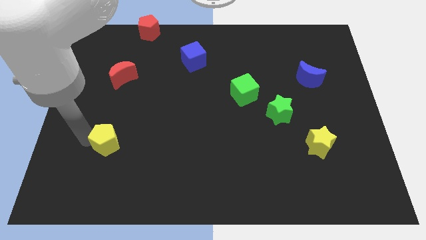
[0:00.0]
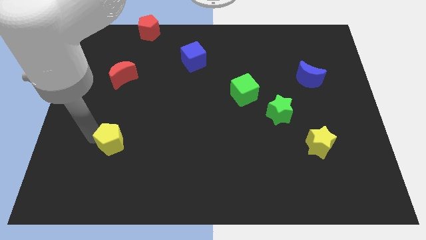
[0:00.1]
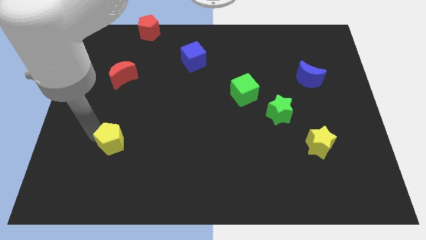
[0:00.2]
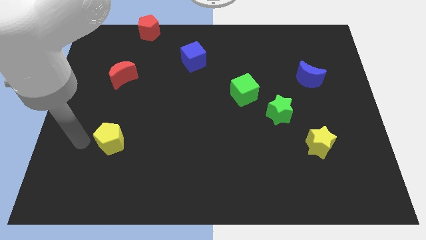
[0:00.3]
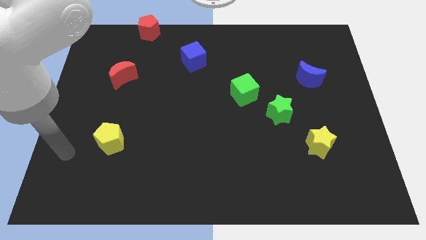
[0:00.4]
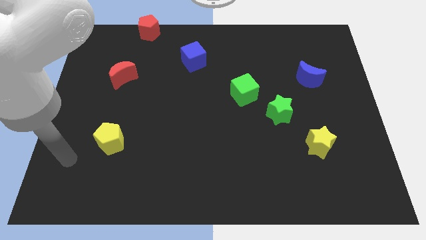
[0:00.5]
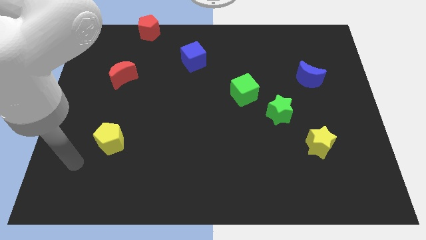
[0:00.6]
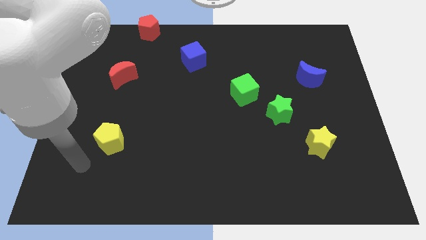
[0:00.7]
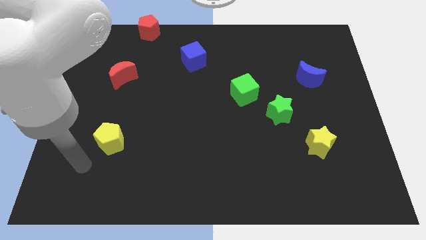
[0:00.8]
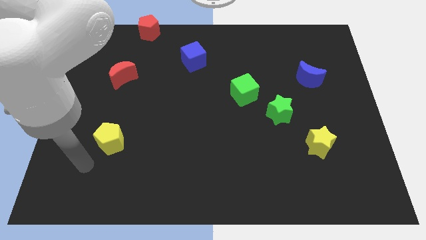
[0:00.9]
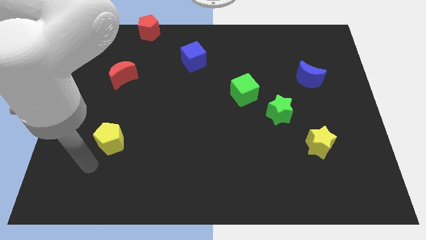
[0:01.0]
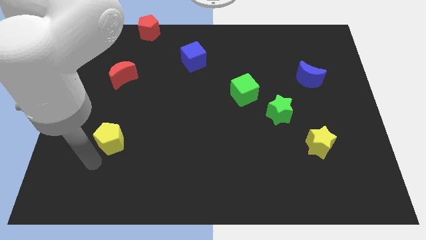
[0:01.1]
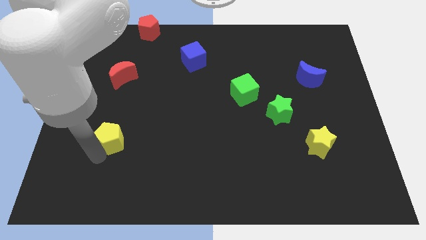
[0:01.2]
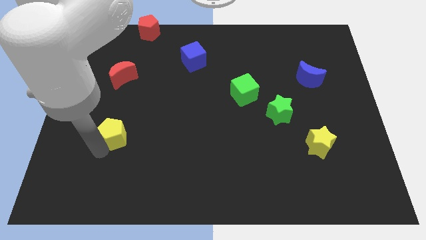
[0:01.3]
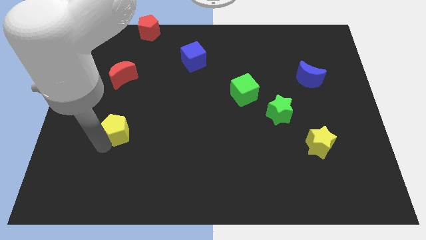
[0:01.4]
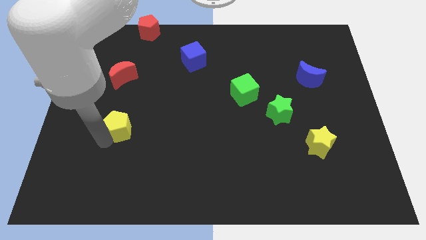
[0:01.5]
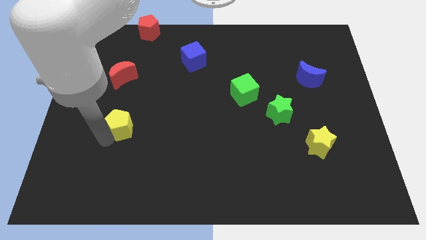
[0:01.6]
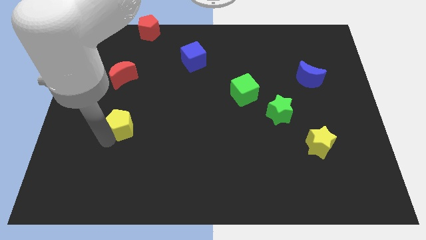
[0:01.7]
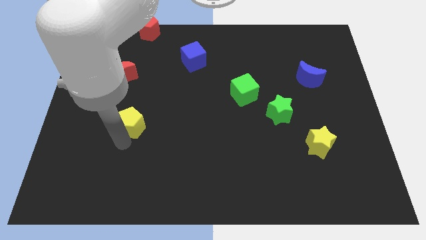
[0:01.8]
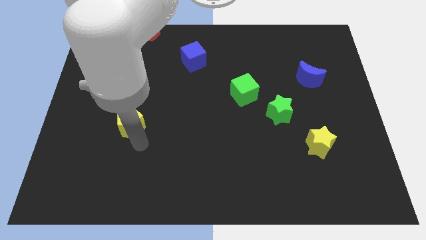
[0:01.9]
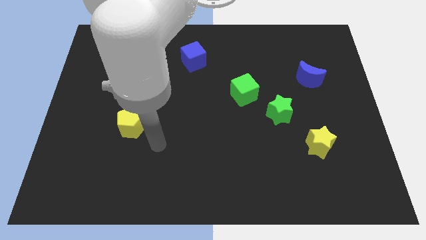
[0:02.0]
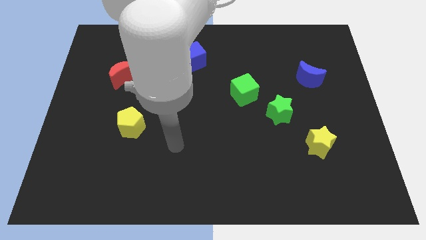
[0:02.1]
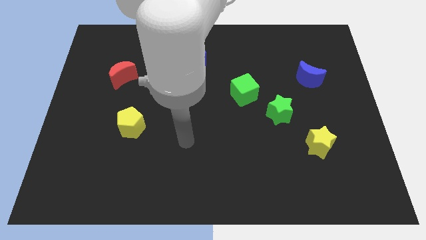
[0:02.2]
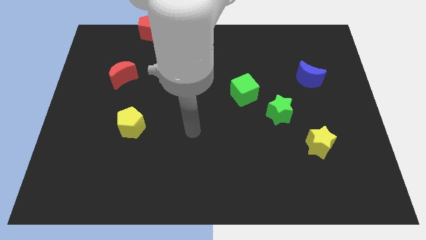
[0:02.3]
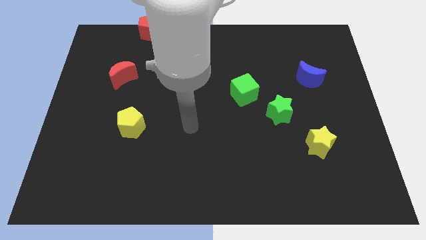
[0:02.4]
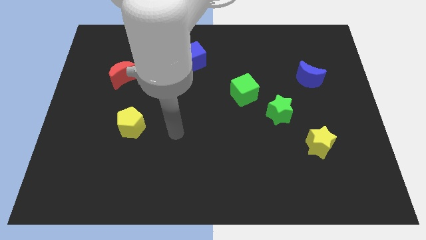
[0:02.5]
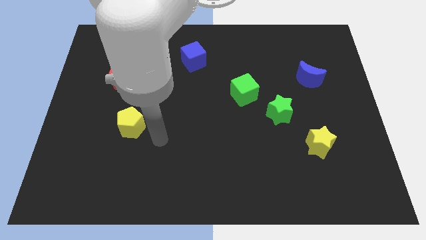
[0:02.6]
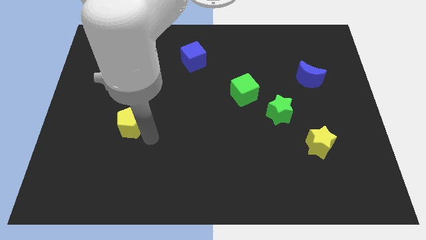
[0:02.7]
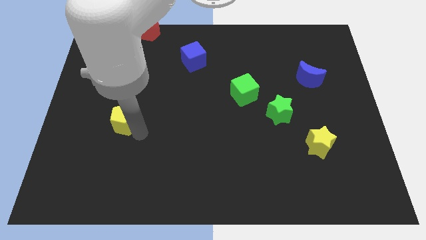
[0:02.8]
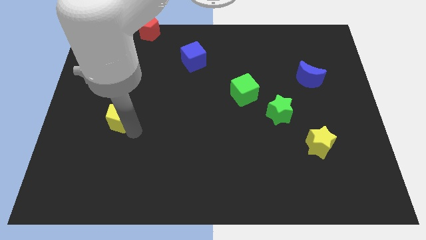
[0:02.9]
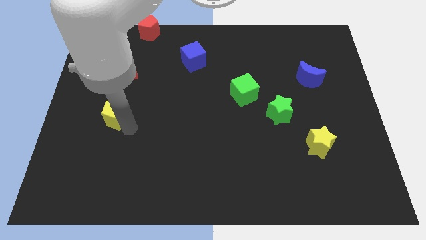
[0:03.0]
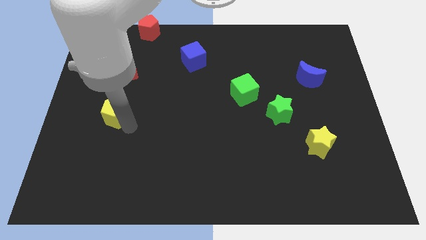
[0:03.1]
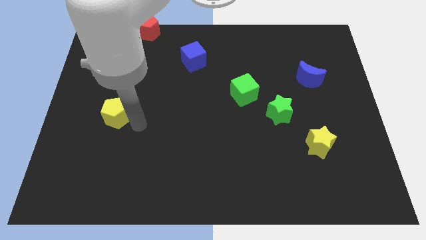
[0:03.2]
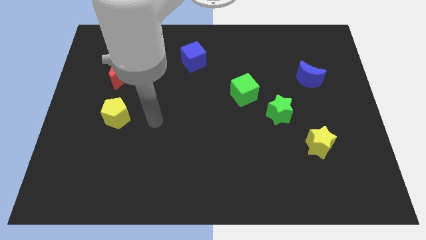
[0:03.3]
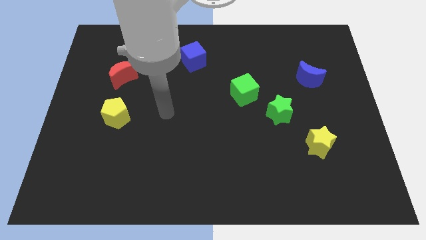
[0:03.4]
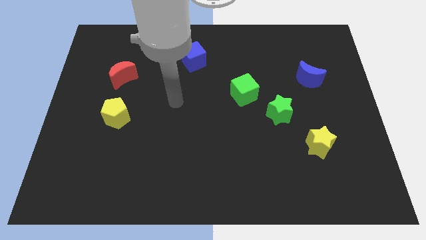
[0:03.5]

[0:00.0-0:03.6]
put the yellow pentagon at the bottom of red crescent

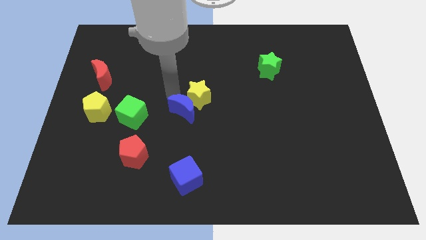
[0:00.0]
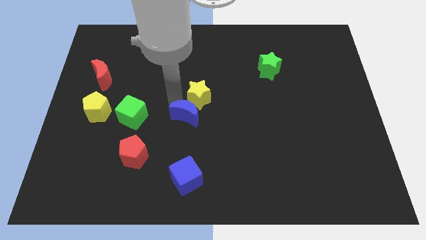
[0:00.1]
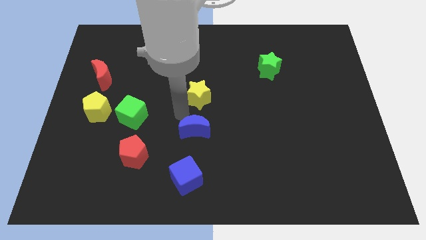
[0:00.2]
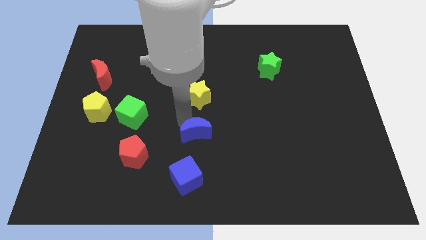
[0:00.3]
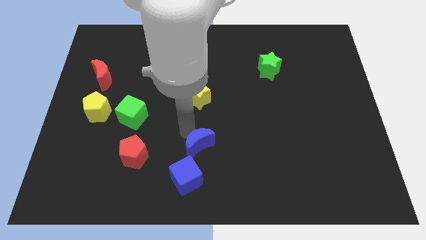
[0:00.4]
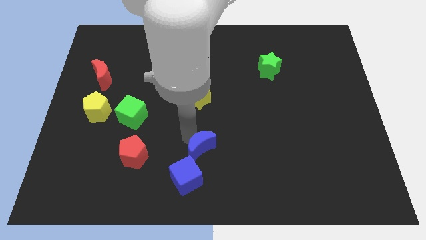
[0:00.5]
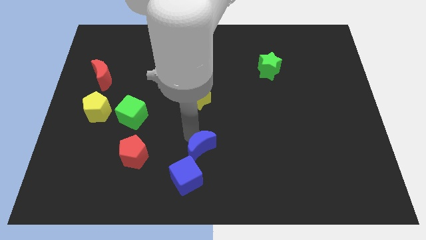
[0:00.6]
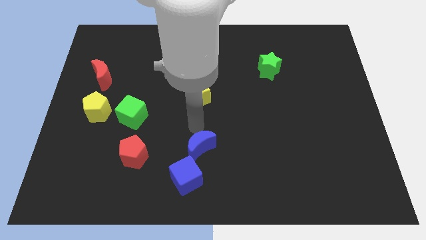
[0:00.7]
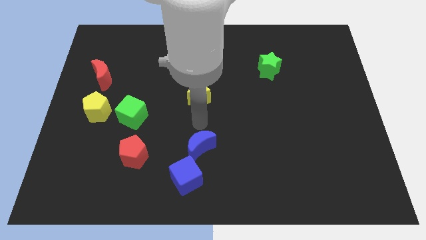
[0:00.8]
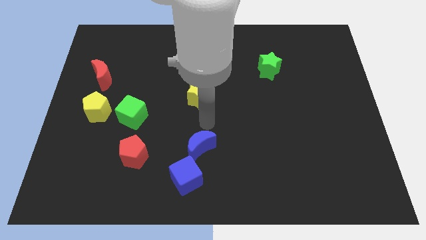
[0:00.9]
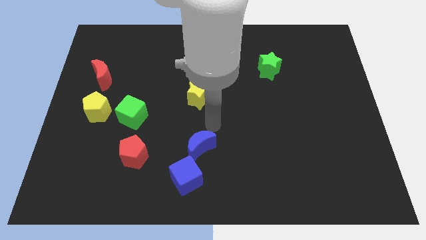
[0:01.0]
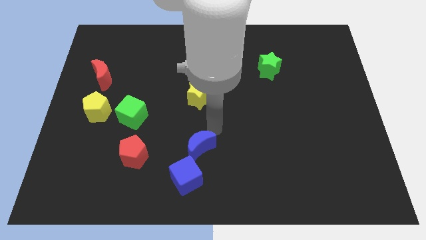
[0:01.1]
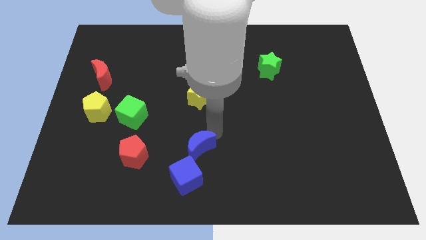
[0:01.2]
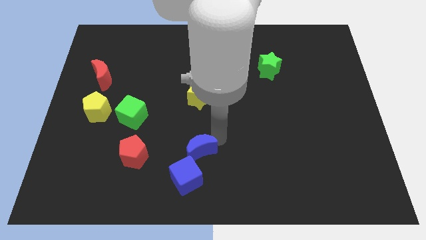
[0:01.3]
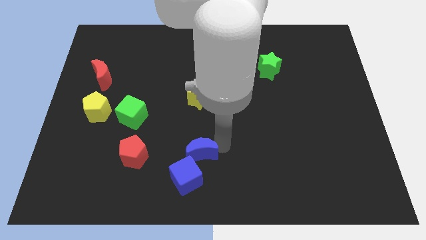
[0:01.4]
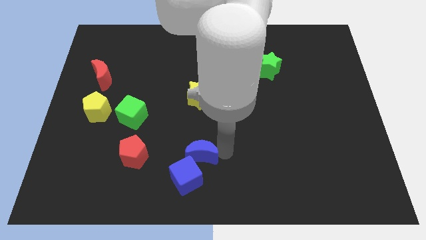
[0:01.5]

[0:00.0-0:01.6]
drag the blue moon close to the blue cube

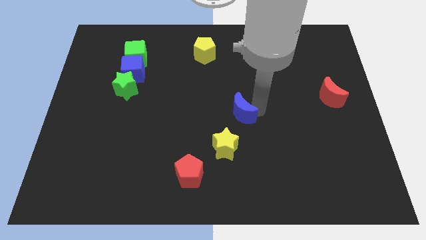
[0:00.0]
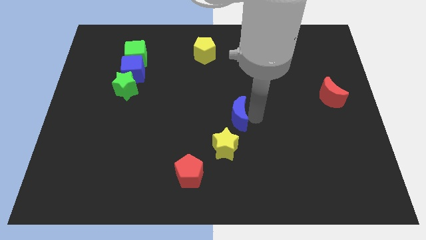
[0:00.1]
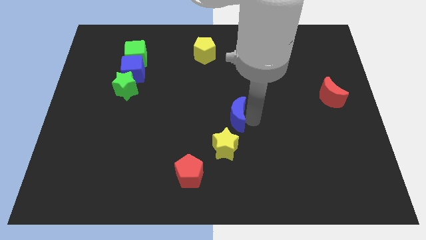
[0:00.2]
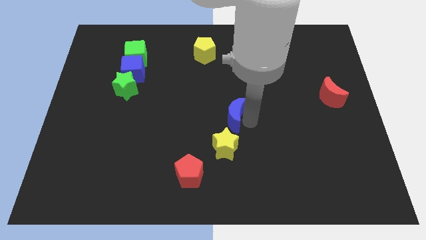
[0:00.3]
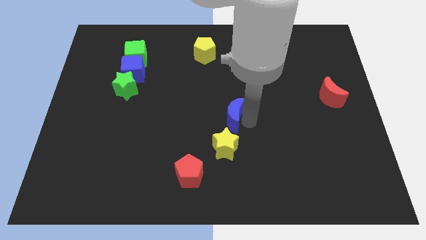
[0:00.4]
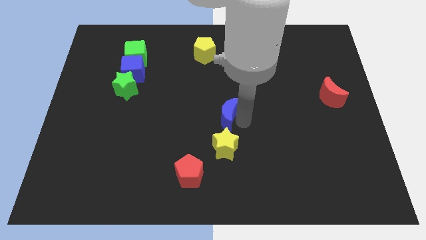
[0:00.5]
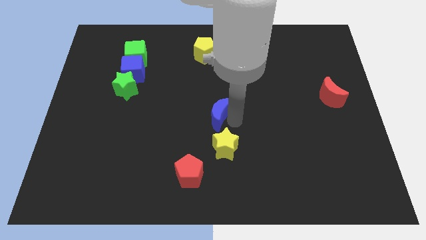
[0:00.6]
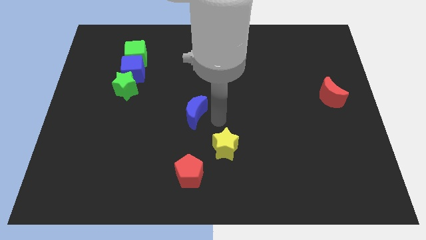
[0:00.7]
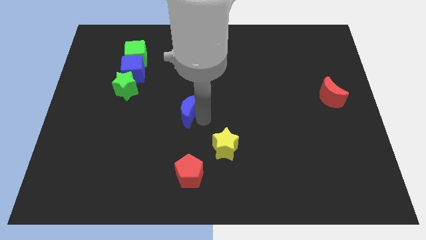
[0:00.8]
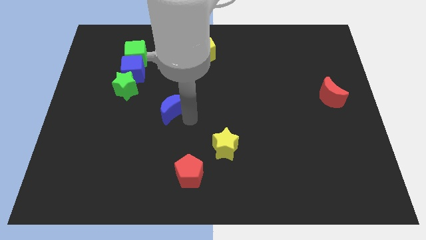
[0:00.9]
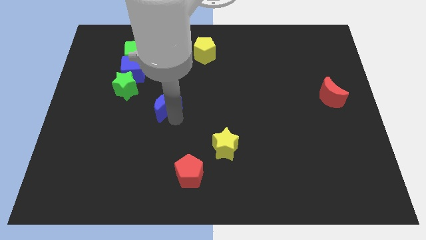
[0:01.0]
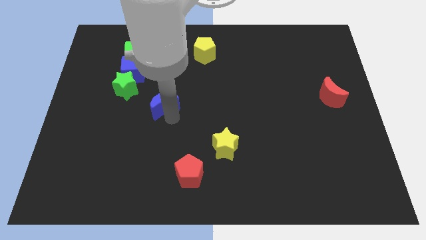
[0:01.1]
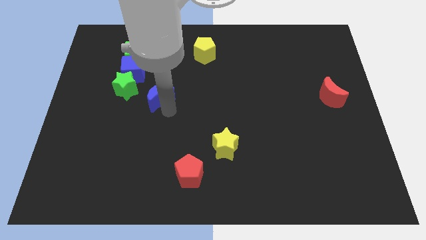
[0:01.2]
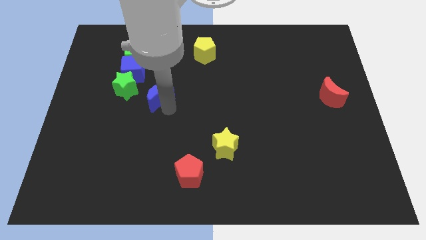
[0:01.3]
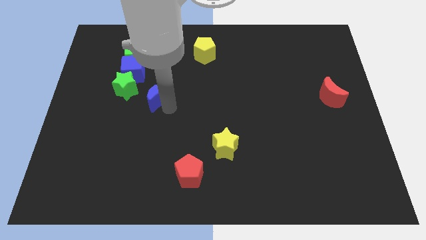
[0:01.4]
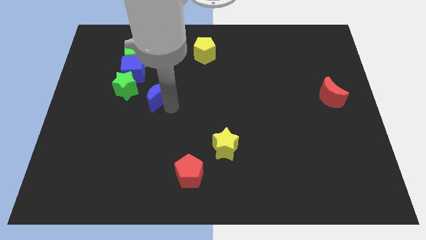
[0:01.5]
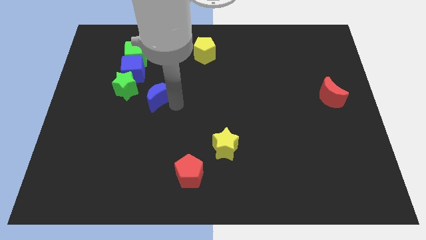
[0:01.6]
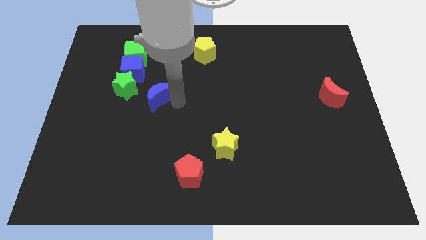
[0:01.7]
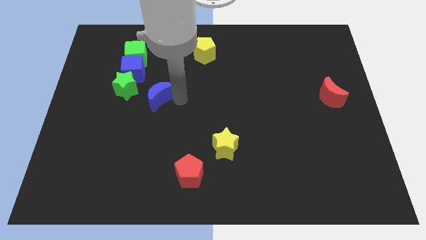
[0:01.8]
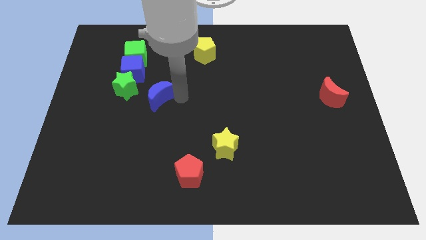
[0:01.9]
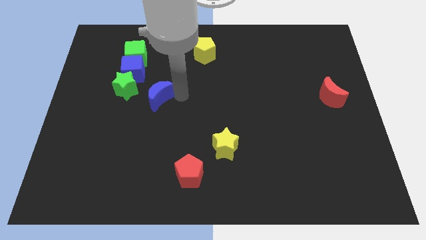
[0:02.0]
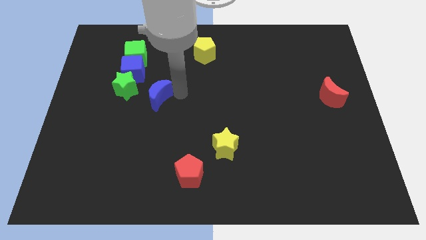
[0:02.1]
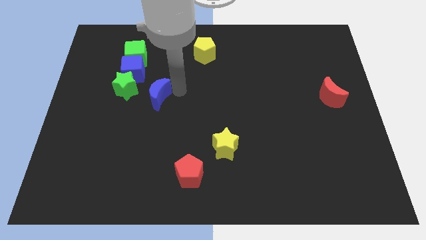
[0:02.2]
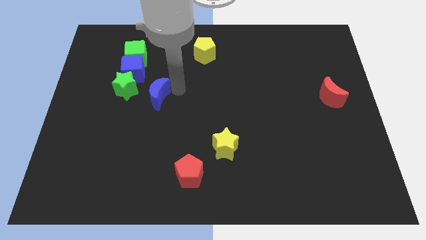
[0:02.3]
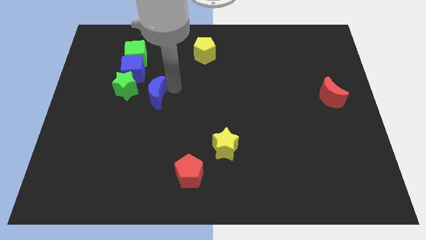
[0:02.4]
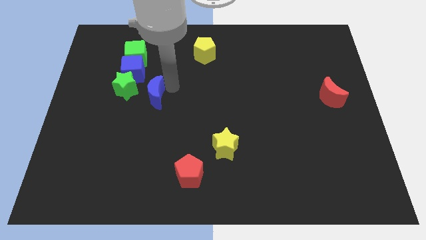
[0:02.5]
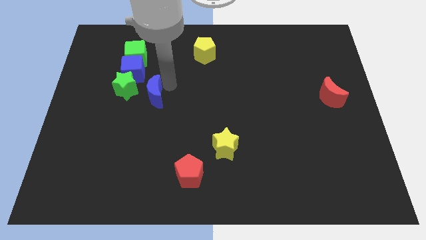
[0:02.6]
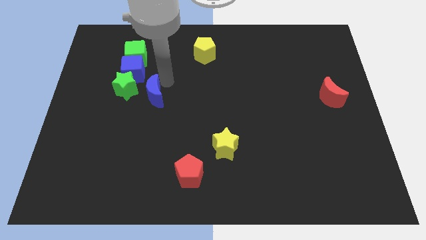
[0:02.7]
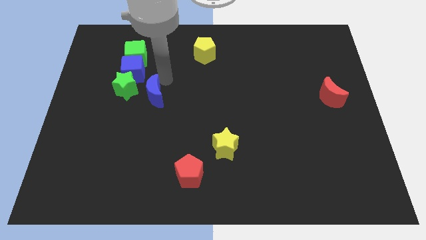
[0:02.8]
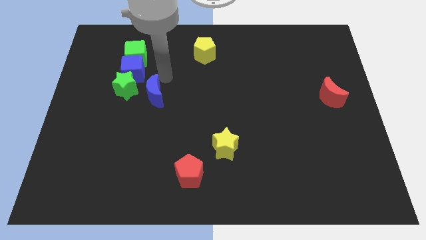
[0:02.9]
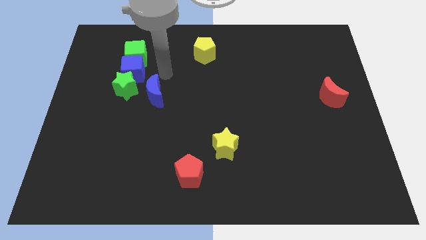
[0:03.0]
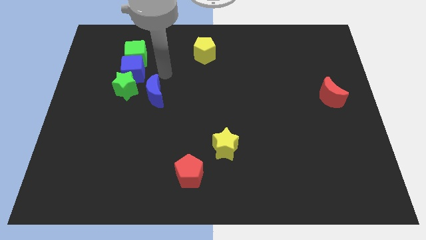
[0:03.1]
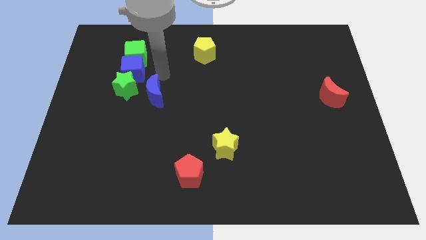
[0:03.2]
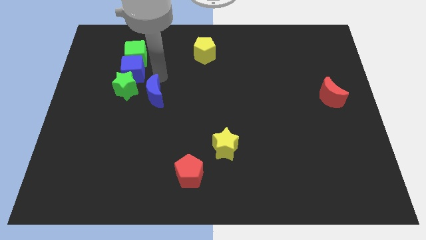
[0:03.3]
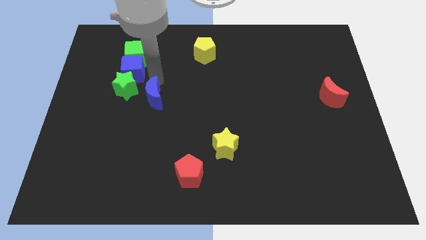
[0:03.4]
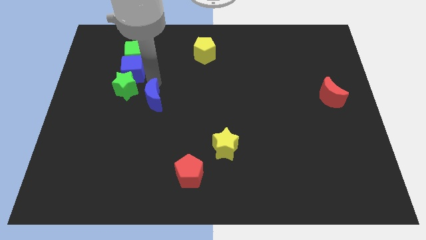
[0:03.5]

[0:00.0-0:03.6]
push the blue crescent to the right of the green star
